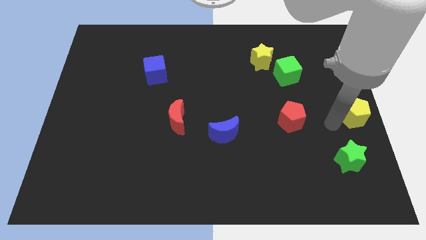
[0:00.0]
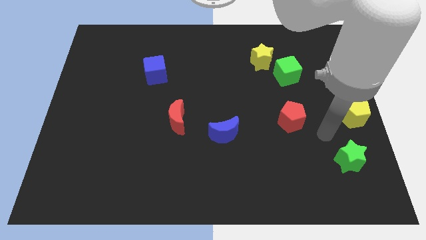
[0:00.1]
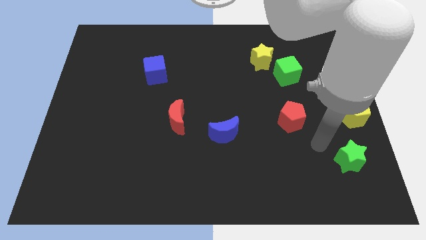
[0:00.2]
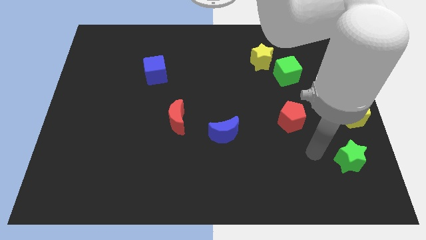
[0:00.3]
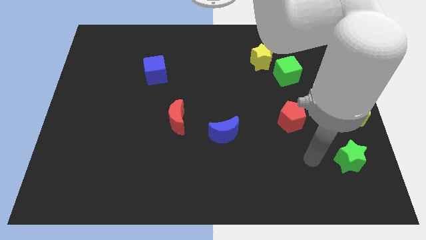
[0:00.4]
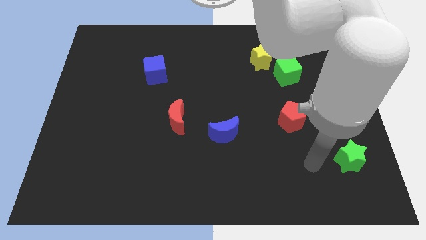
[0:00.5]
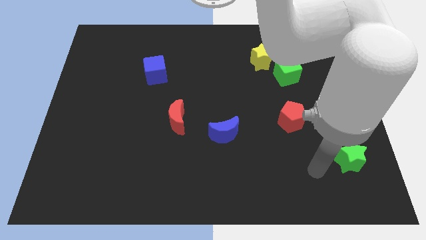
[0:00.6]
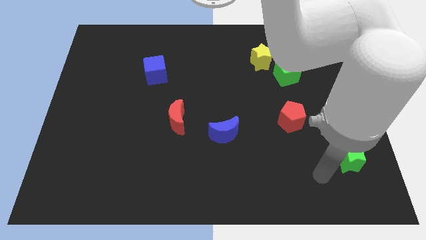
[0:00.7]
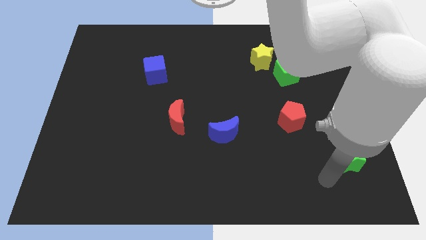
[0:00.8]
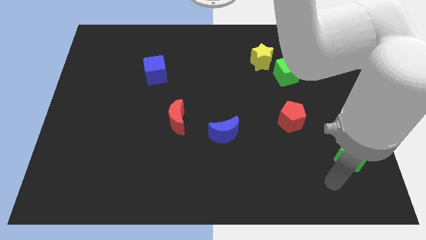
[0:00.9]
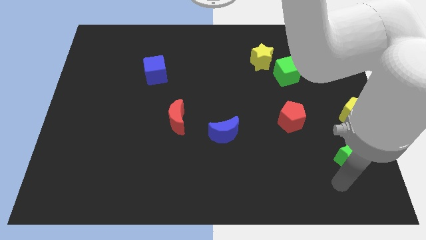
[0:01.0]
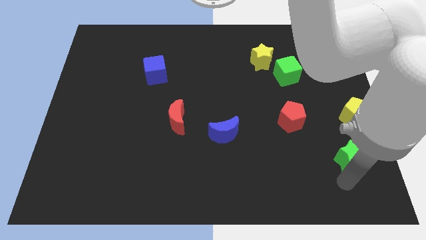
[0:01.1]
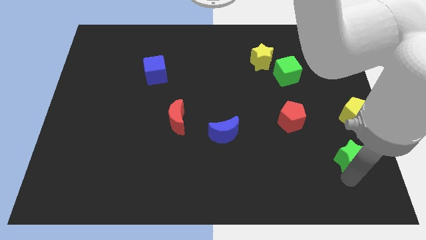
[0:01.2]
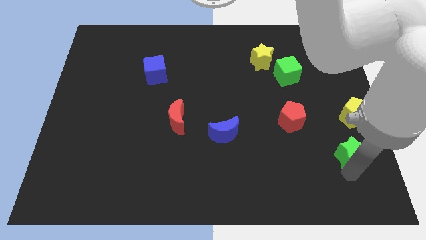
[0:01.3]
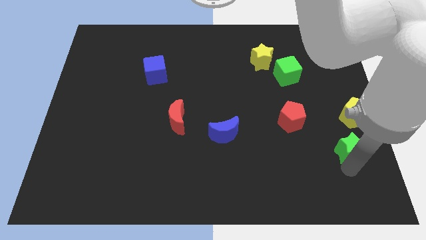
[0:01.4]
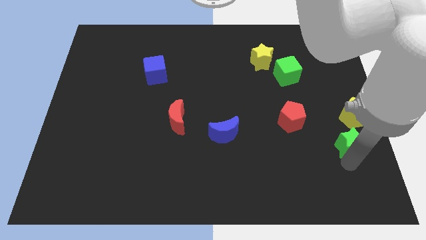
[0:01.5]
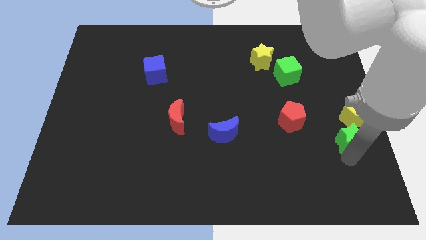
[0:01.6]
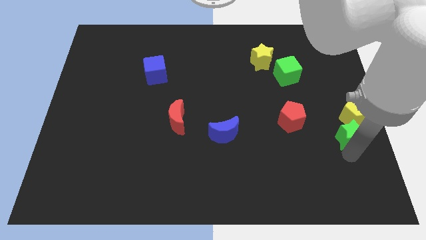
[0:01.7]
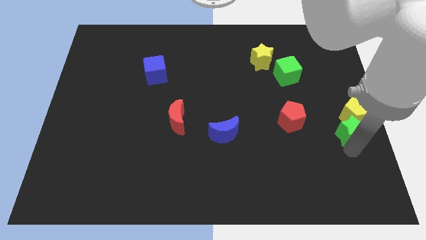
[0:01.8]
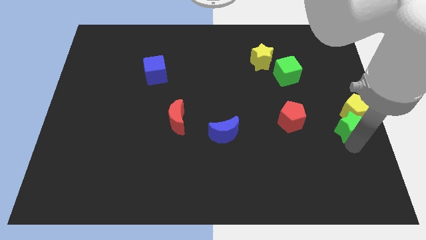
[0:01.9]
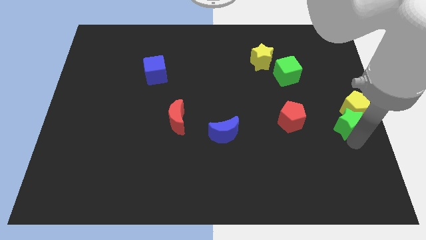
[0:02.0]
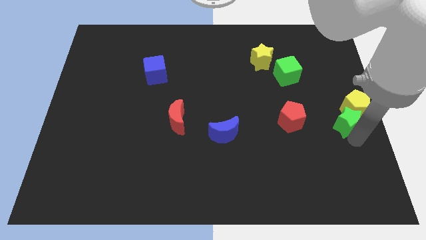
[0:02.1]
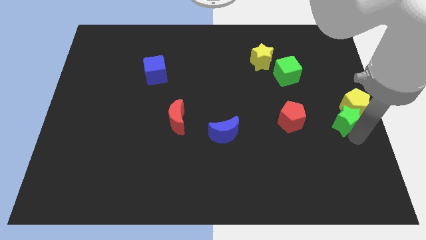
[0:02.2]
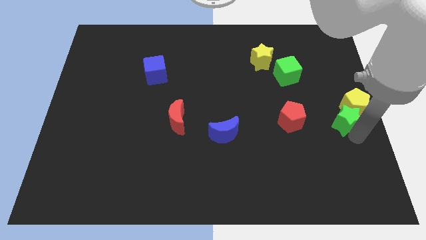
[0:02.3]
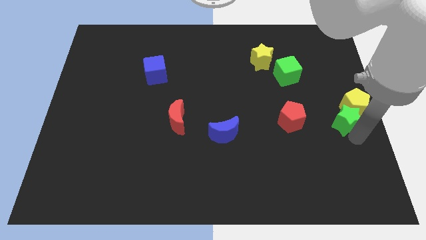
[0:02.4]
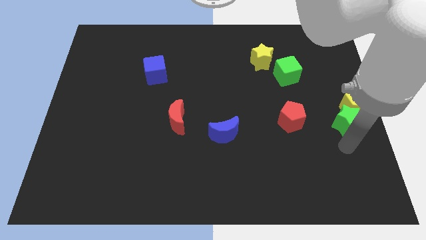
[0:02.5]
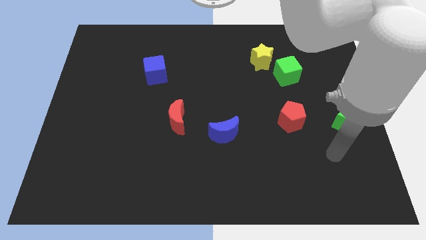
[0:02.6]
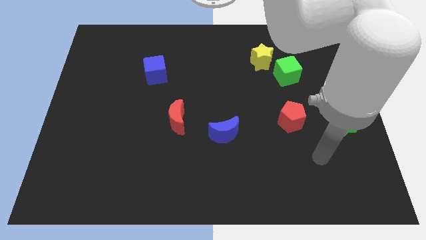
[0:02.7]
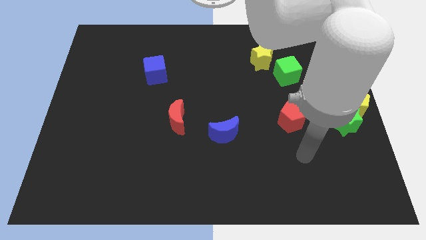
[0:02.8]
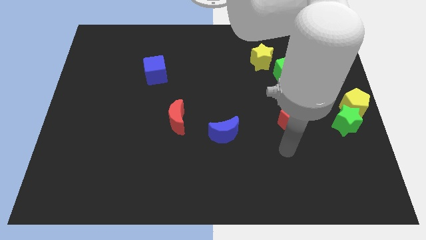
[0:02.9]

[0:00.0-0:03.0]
push the green star into the yellow pentagon

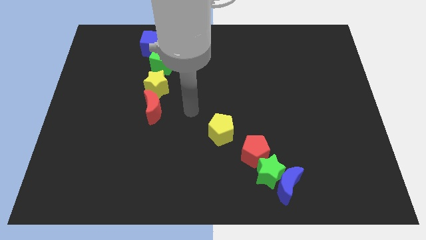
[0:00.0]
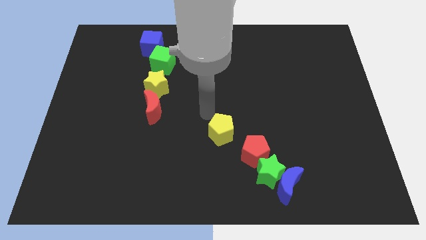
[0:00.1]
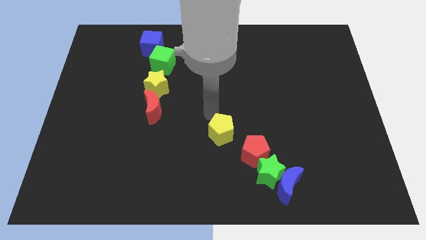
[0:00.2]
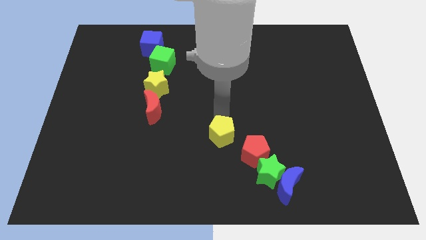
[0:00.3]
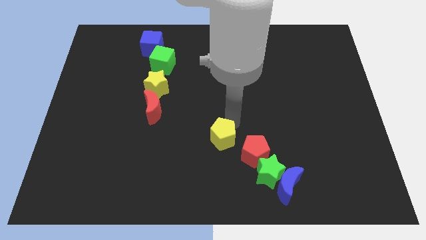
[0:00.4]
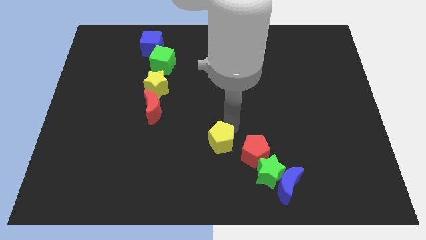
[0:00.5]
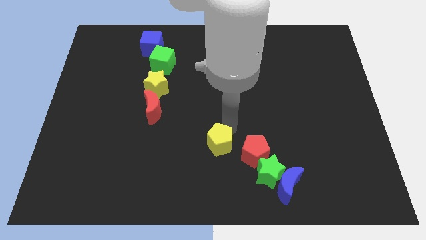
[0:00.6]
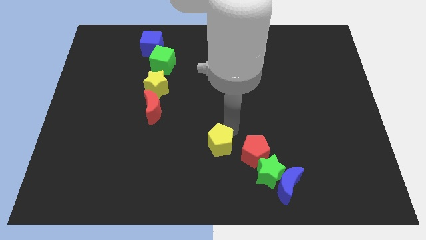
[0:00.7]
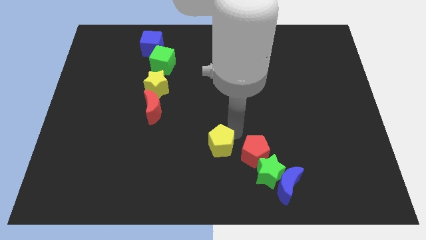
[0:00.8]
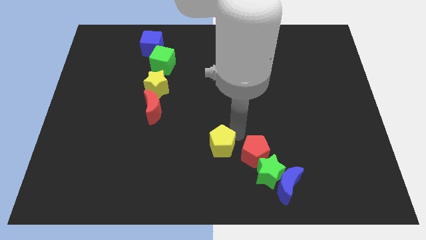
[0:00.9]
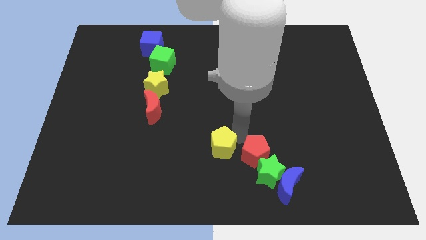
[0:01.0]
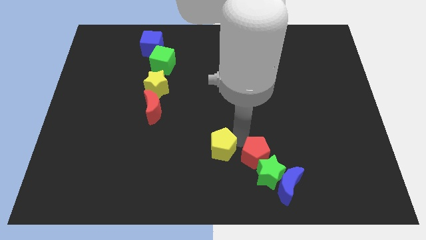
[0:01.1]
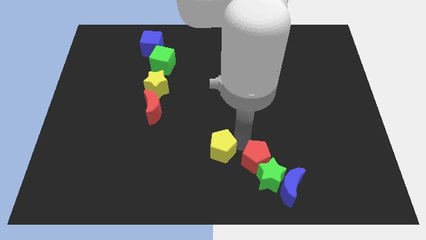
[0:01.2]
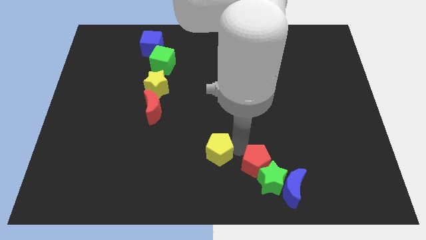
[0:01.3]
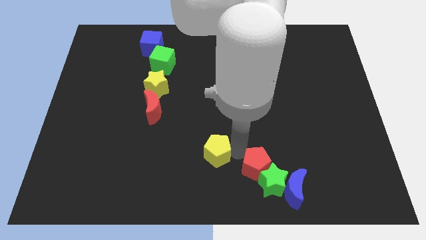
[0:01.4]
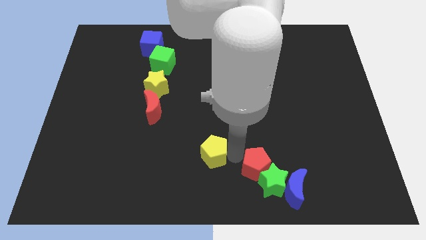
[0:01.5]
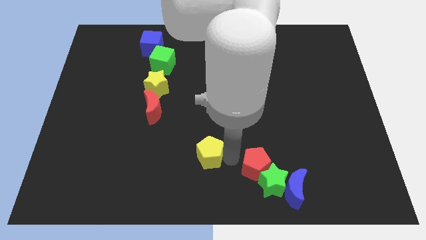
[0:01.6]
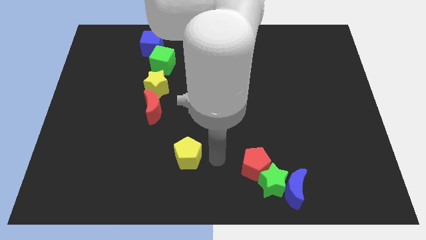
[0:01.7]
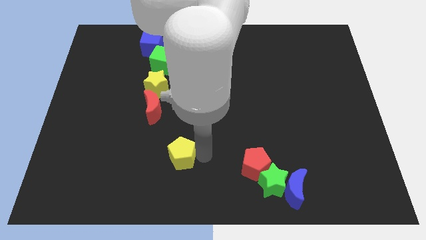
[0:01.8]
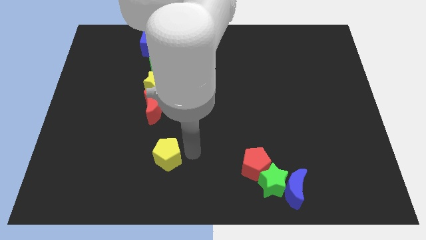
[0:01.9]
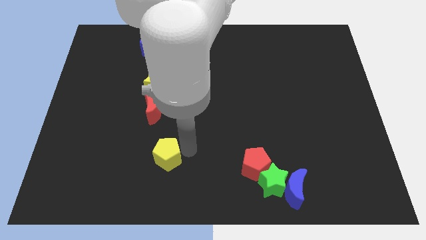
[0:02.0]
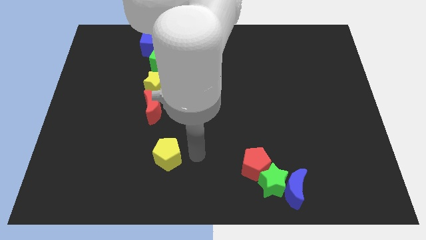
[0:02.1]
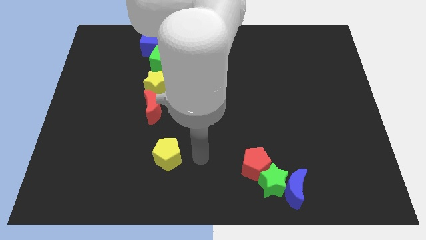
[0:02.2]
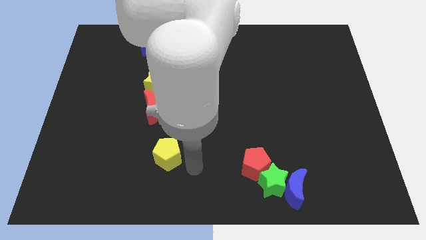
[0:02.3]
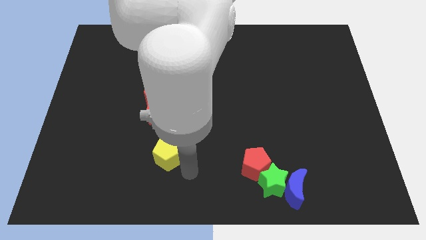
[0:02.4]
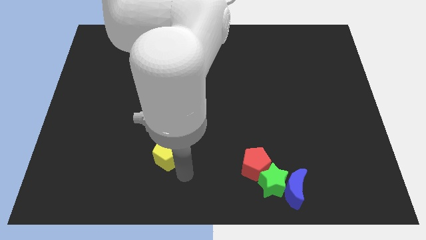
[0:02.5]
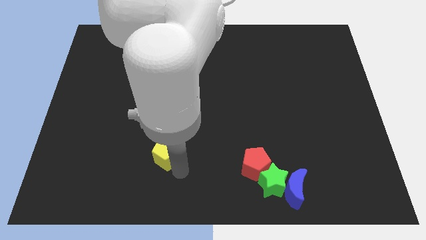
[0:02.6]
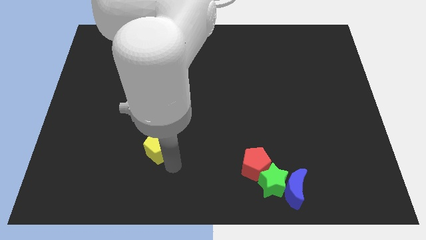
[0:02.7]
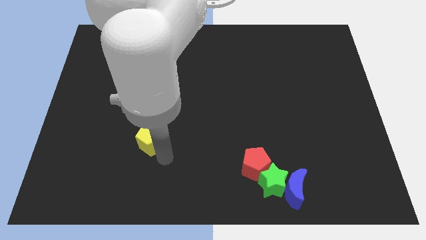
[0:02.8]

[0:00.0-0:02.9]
push the yellow pentagon to the bottom of the red crescent

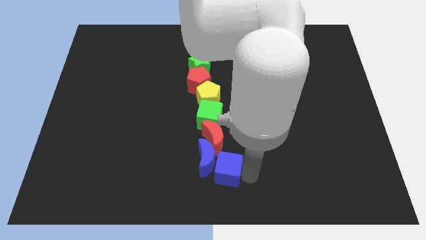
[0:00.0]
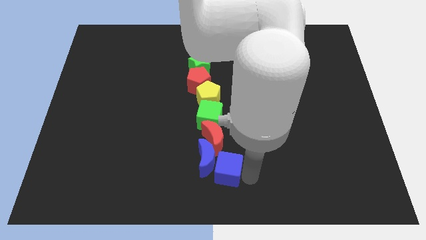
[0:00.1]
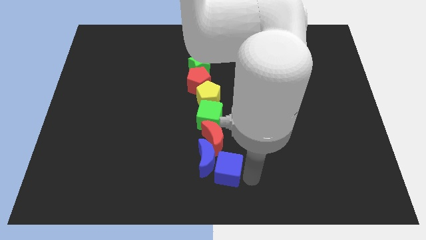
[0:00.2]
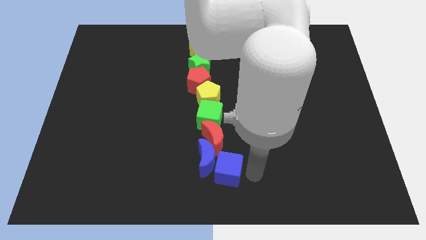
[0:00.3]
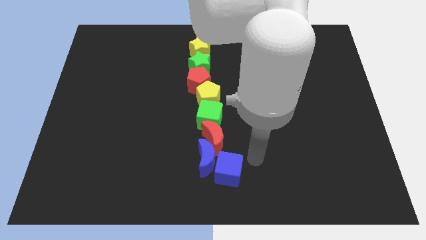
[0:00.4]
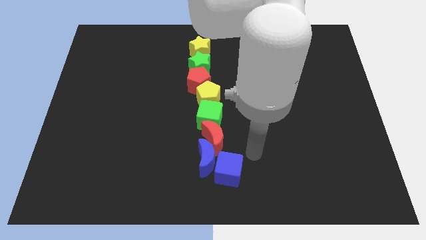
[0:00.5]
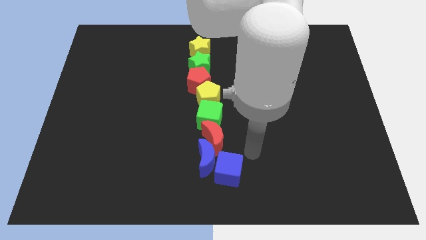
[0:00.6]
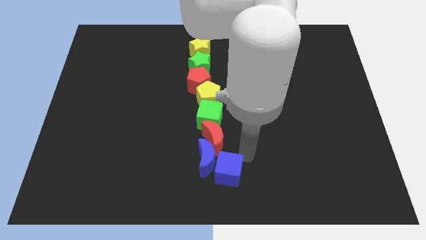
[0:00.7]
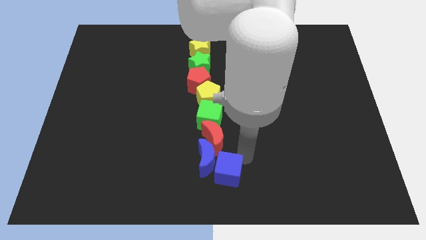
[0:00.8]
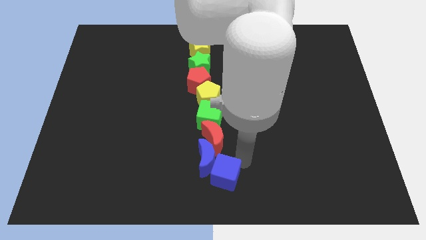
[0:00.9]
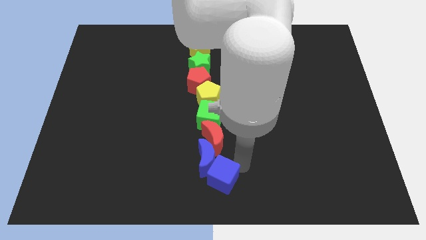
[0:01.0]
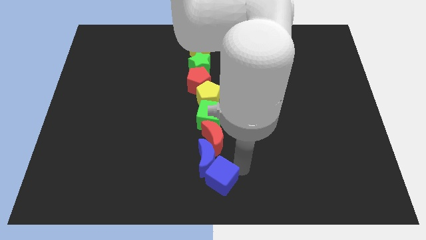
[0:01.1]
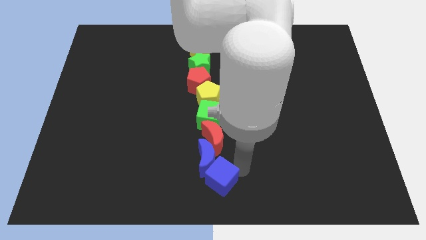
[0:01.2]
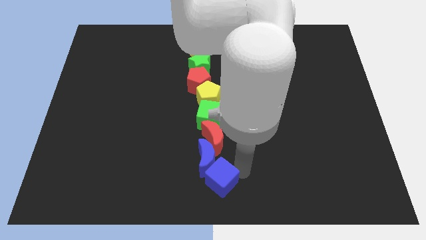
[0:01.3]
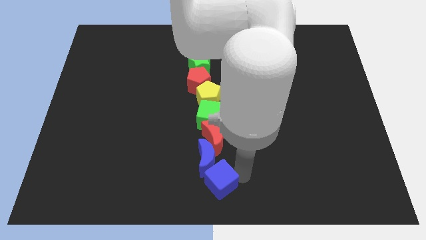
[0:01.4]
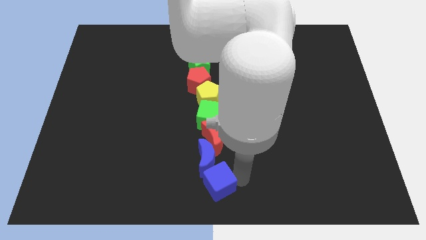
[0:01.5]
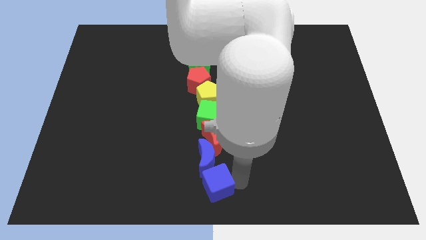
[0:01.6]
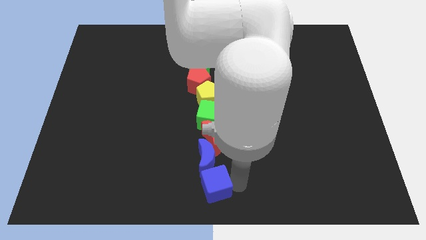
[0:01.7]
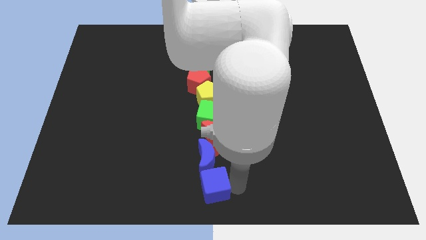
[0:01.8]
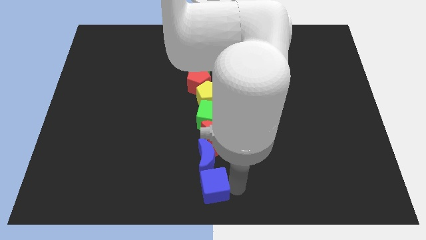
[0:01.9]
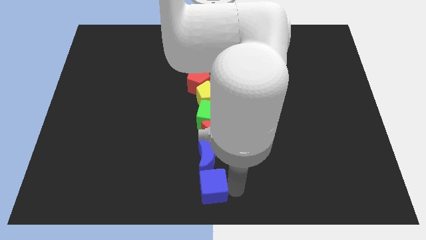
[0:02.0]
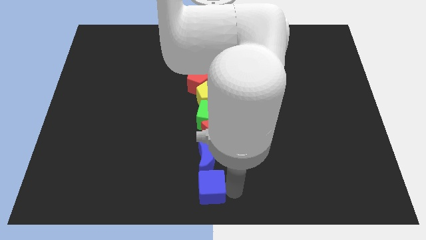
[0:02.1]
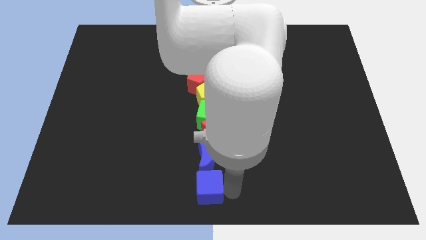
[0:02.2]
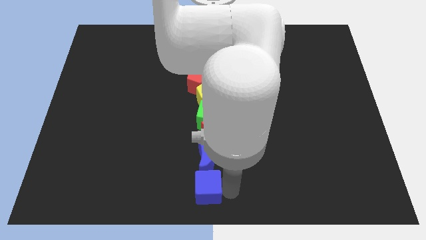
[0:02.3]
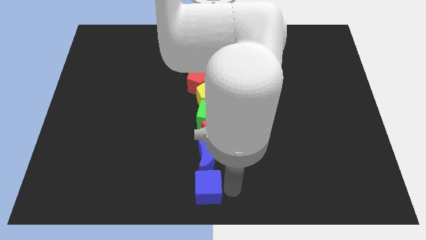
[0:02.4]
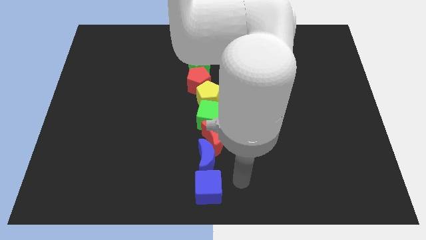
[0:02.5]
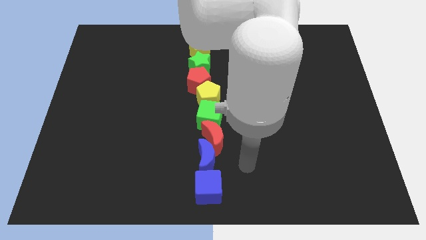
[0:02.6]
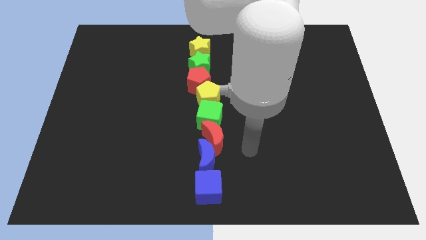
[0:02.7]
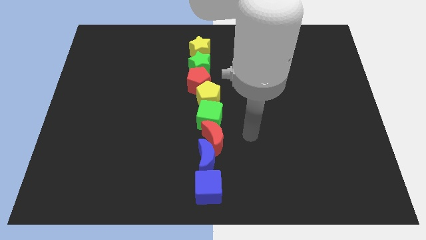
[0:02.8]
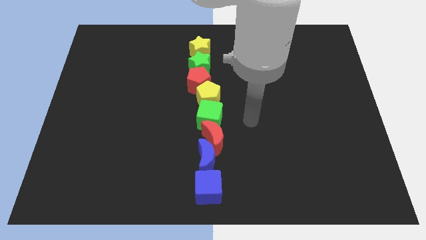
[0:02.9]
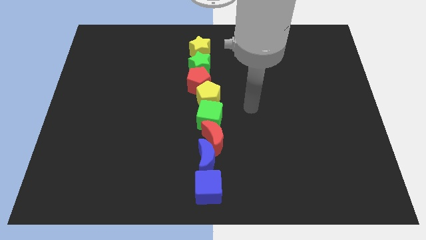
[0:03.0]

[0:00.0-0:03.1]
place the blue cube below the blue moon
